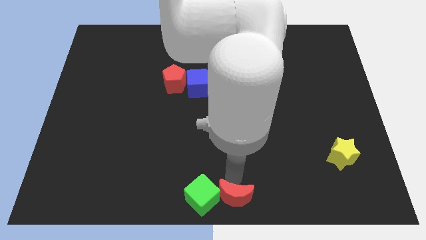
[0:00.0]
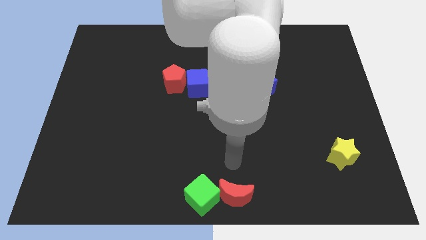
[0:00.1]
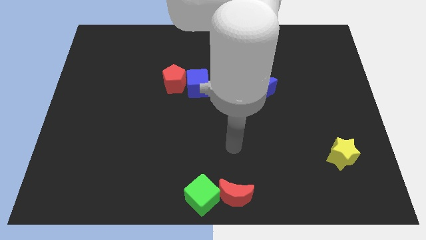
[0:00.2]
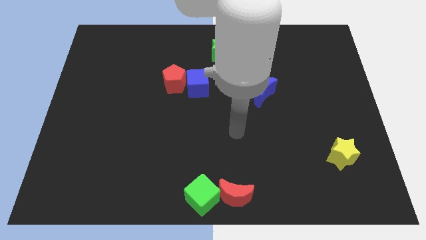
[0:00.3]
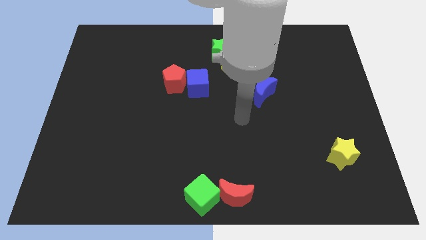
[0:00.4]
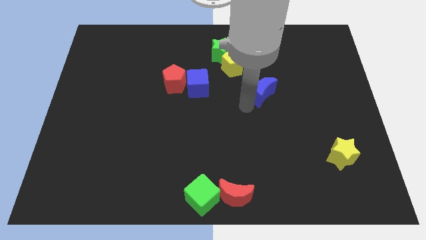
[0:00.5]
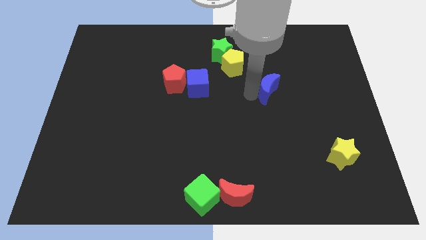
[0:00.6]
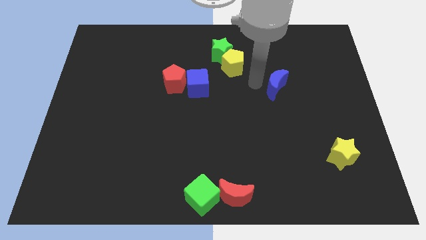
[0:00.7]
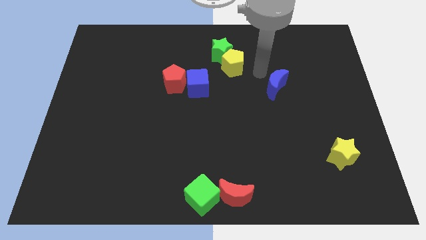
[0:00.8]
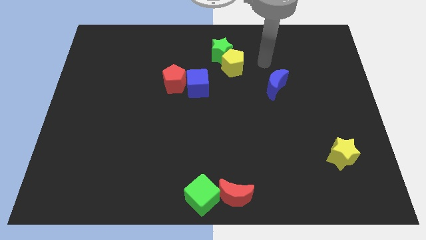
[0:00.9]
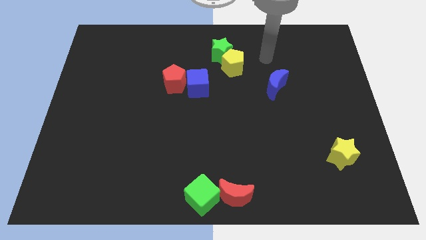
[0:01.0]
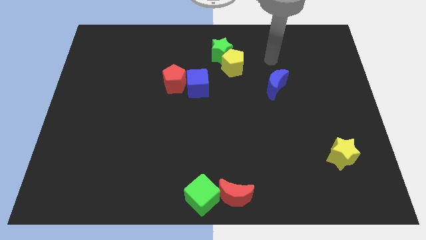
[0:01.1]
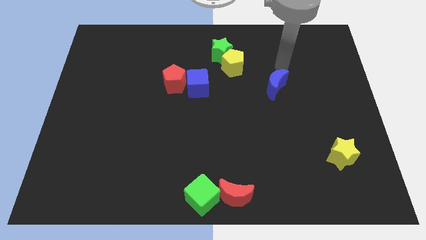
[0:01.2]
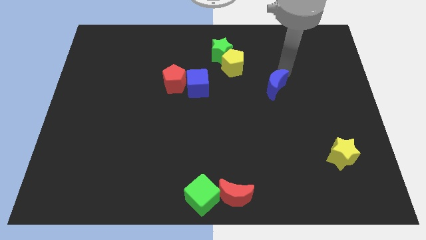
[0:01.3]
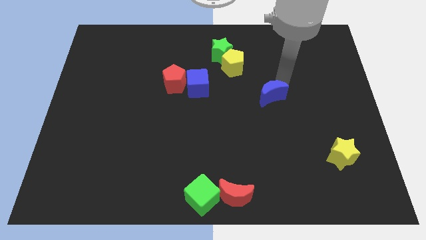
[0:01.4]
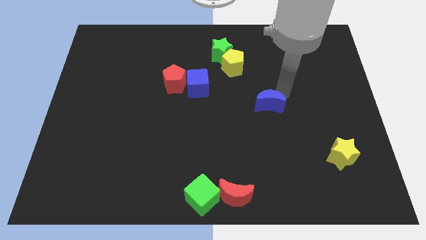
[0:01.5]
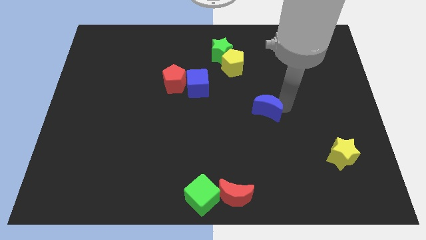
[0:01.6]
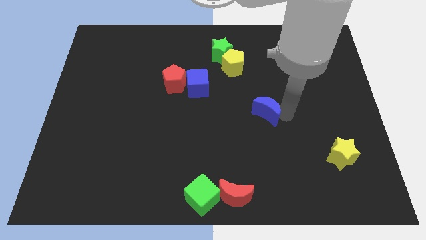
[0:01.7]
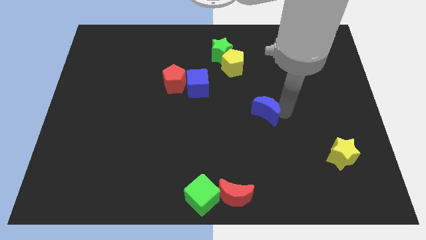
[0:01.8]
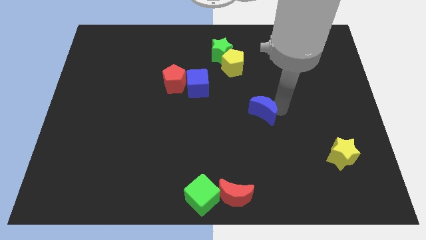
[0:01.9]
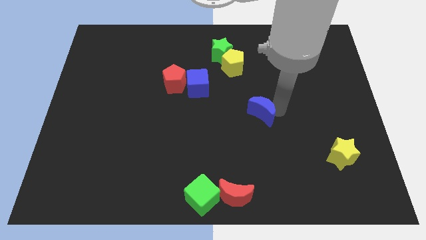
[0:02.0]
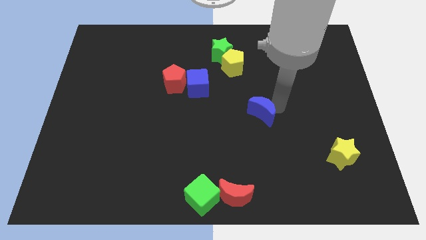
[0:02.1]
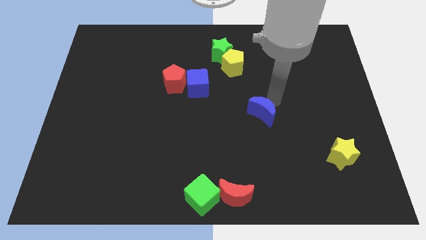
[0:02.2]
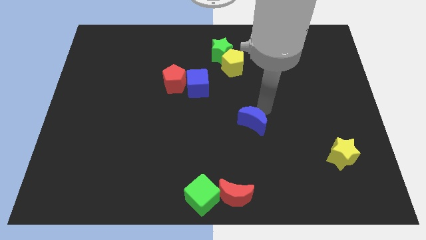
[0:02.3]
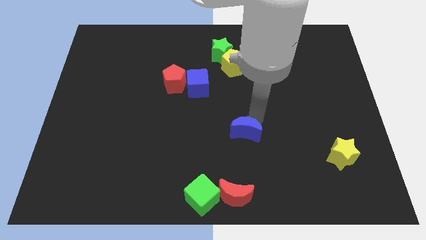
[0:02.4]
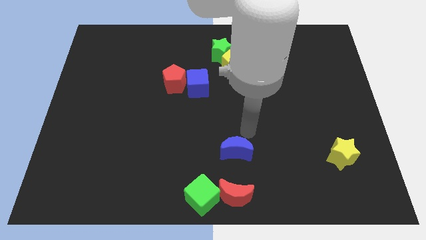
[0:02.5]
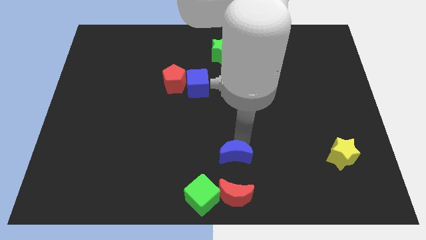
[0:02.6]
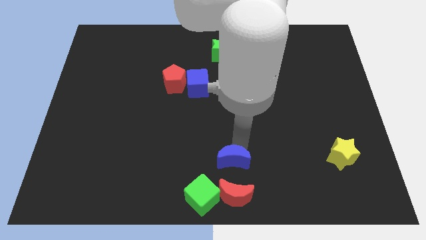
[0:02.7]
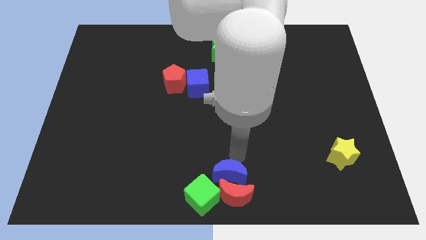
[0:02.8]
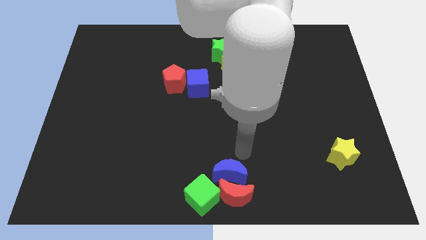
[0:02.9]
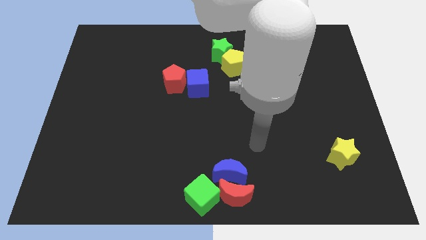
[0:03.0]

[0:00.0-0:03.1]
place the blue moon at the top of red moon

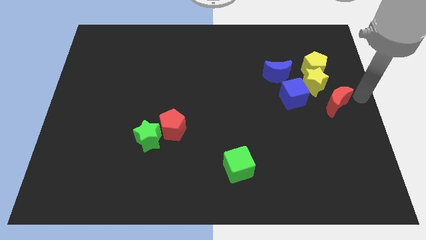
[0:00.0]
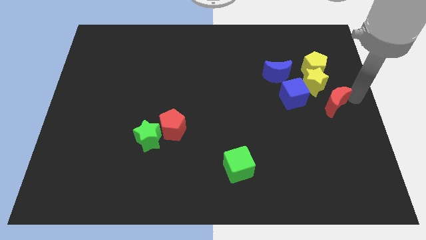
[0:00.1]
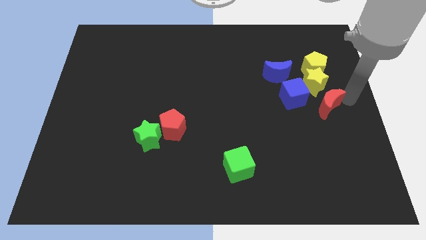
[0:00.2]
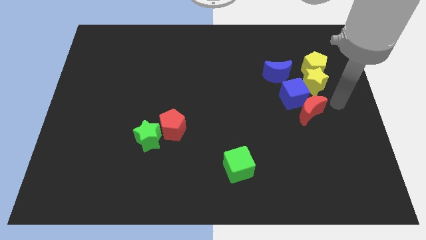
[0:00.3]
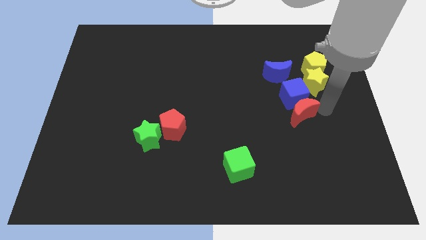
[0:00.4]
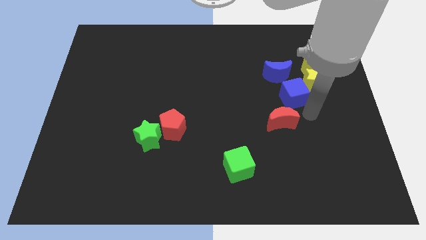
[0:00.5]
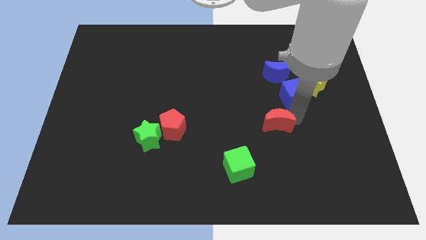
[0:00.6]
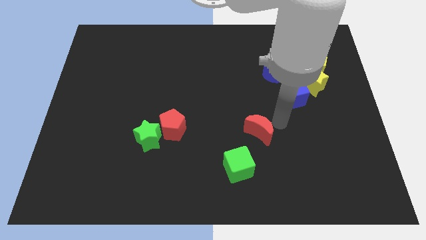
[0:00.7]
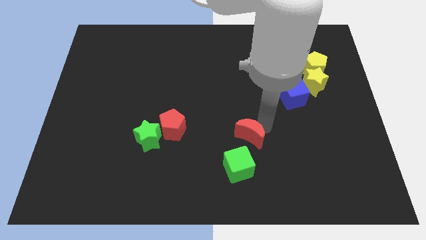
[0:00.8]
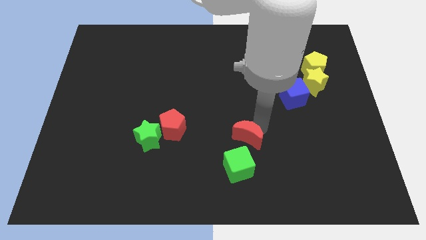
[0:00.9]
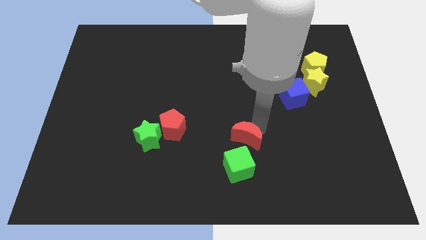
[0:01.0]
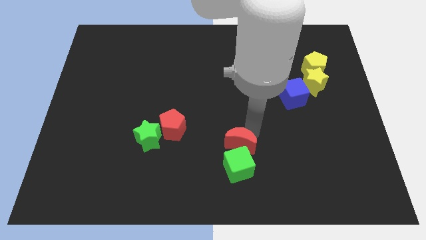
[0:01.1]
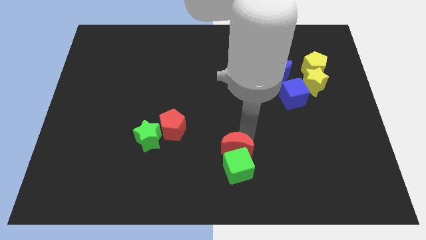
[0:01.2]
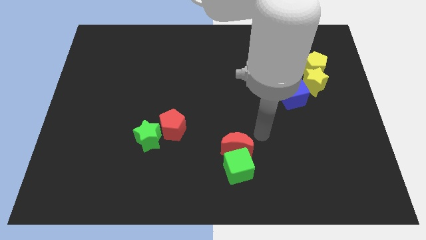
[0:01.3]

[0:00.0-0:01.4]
place the red moon above the green cube

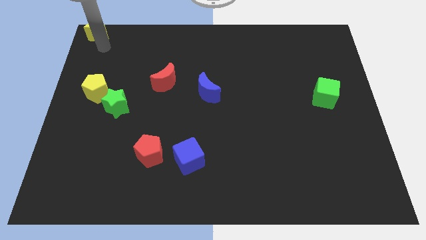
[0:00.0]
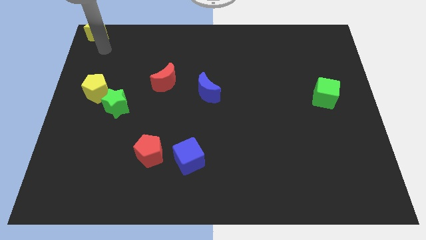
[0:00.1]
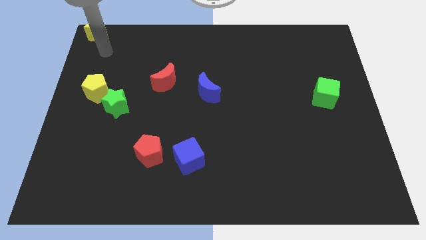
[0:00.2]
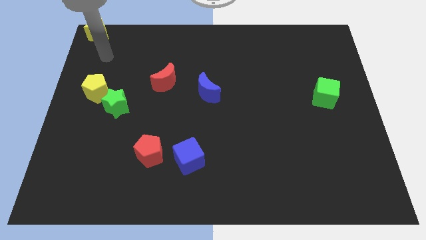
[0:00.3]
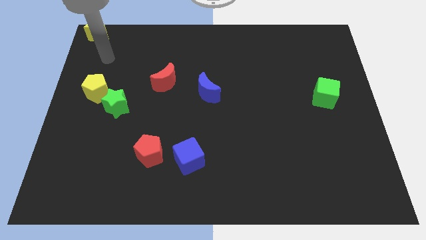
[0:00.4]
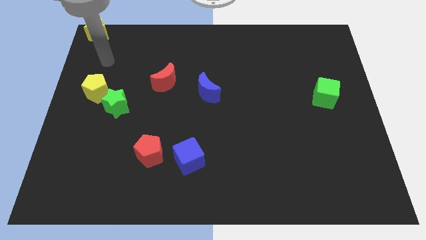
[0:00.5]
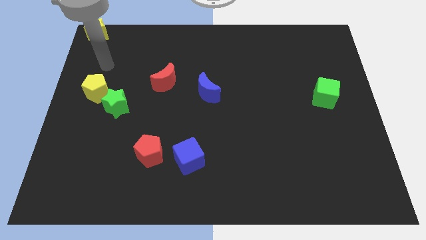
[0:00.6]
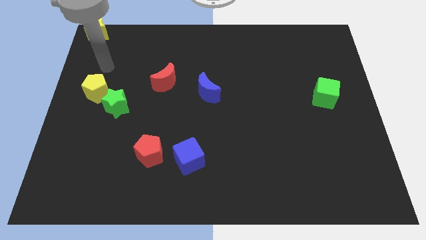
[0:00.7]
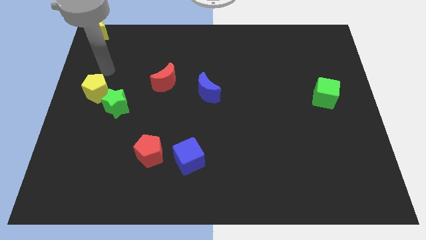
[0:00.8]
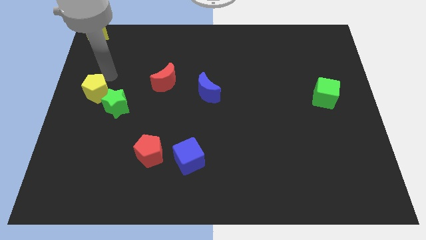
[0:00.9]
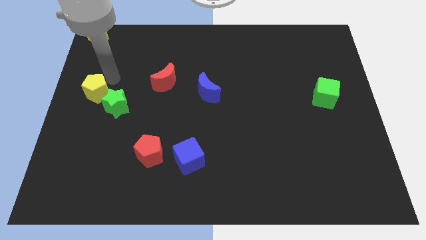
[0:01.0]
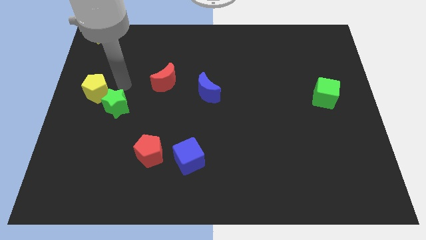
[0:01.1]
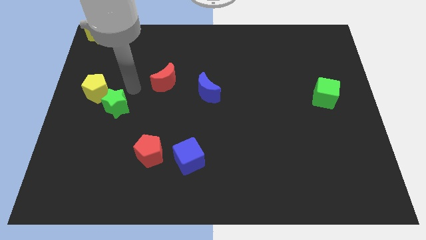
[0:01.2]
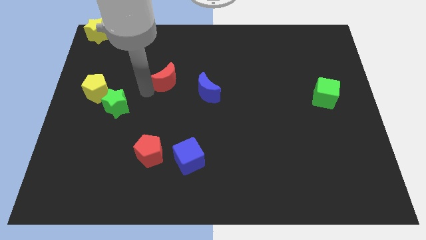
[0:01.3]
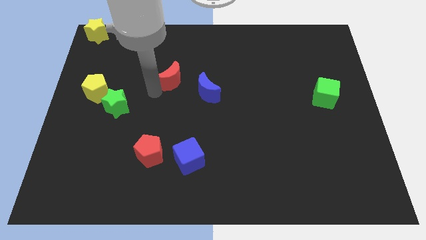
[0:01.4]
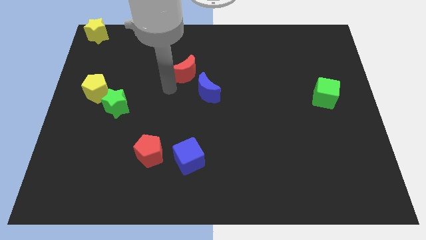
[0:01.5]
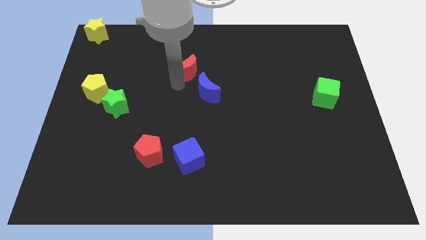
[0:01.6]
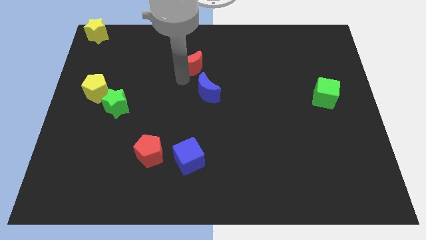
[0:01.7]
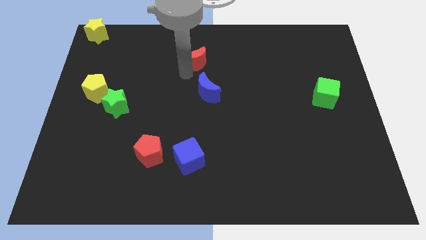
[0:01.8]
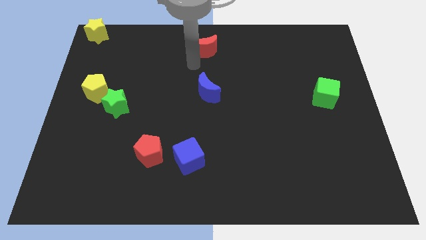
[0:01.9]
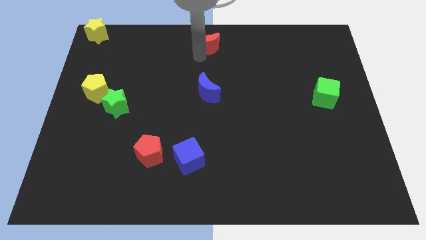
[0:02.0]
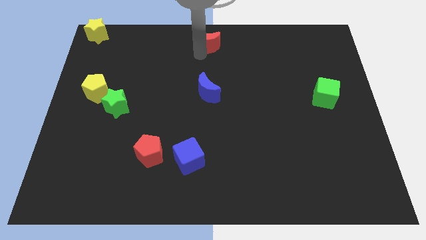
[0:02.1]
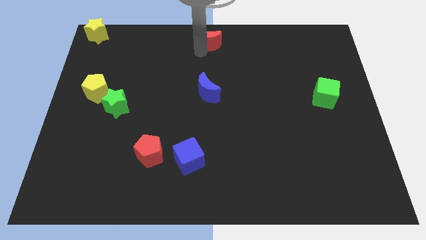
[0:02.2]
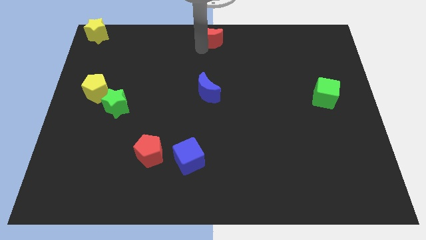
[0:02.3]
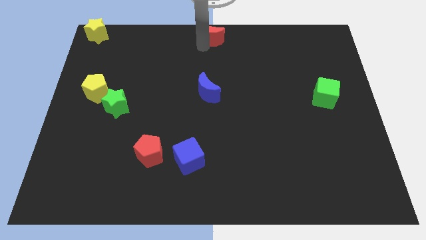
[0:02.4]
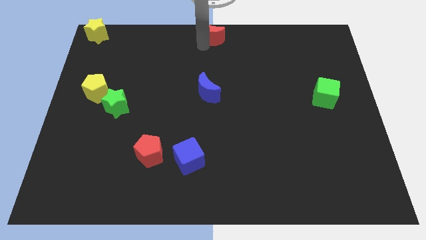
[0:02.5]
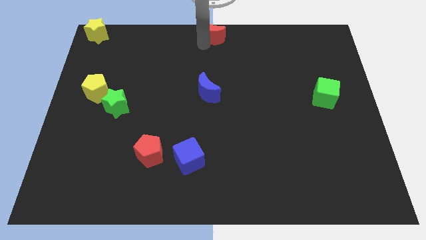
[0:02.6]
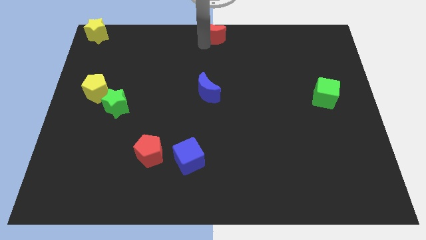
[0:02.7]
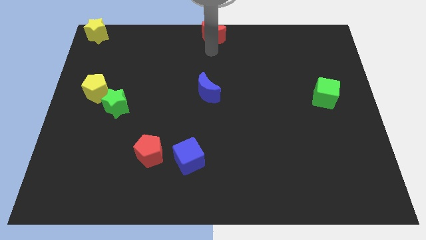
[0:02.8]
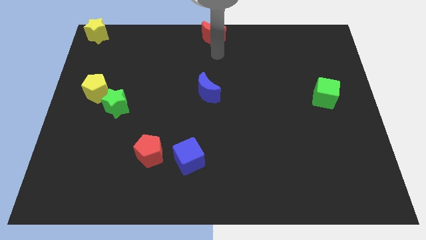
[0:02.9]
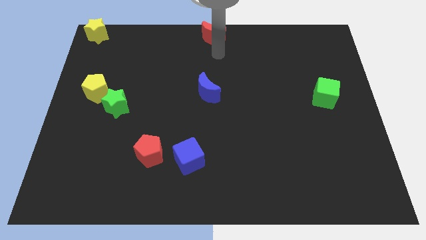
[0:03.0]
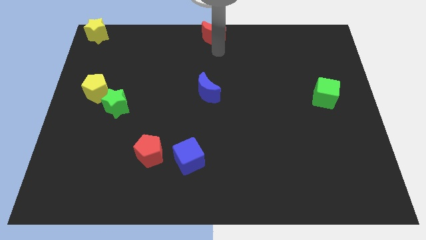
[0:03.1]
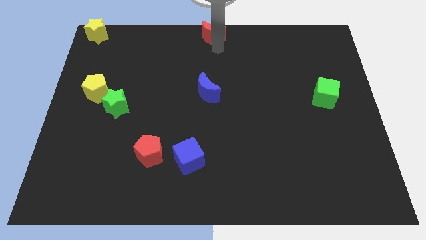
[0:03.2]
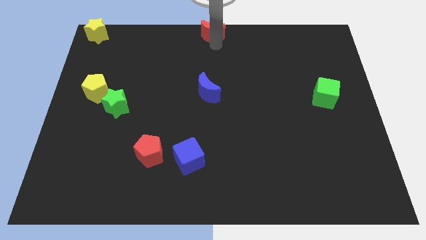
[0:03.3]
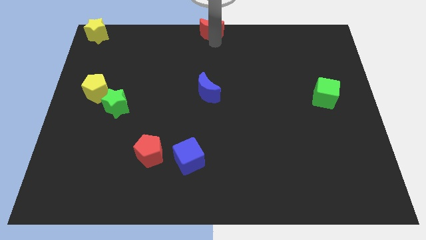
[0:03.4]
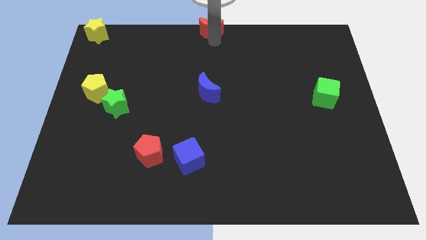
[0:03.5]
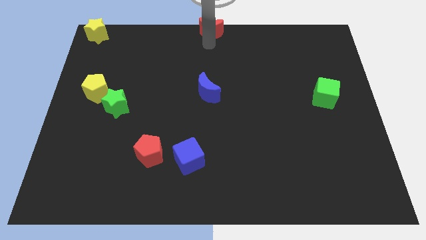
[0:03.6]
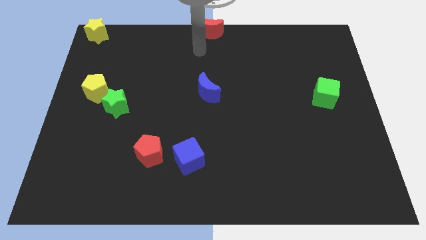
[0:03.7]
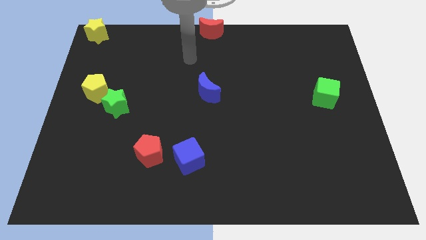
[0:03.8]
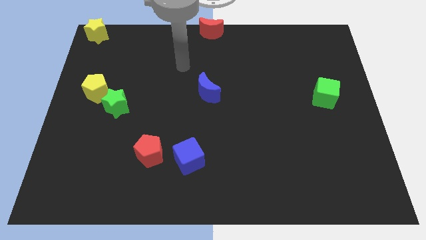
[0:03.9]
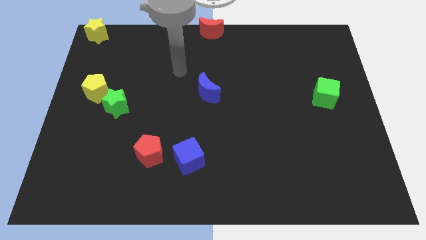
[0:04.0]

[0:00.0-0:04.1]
push the red crescent above the blue crescent

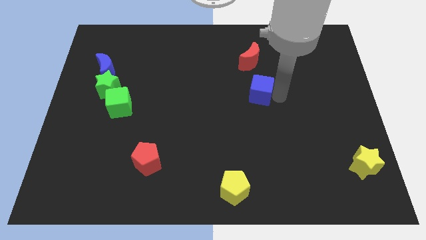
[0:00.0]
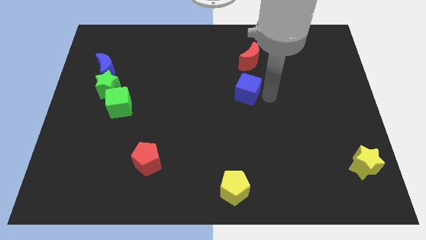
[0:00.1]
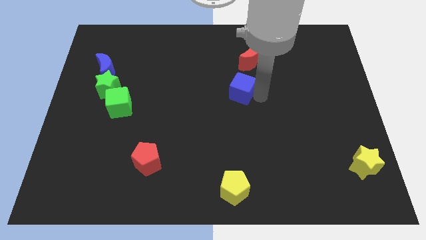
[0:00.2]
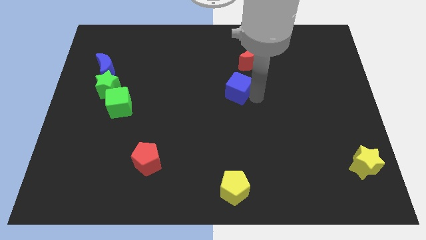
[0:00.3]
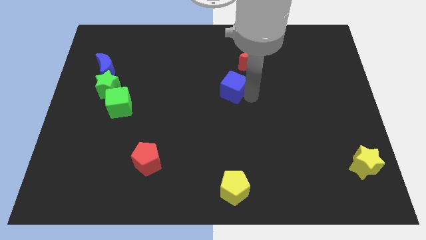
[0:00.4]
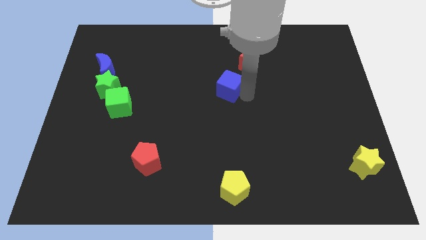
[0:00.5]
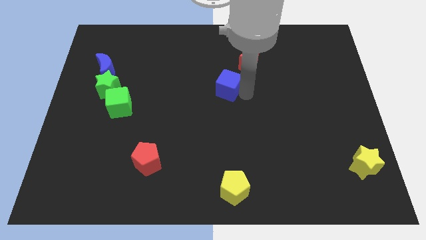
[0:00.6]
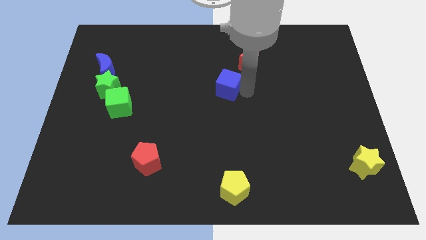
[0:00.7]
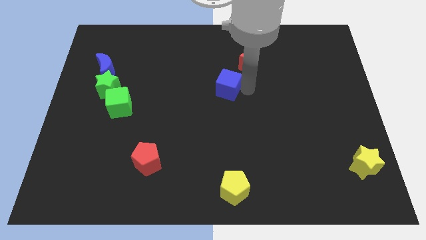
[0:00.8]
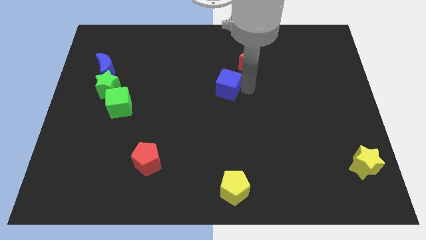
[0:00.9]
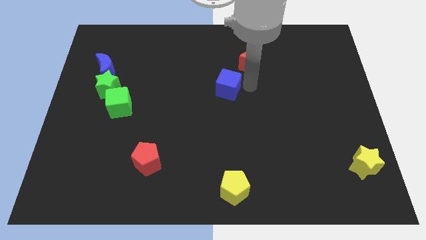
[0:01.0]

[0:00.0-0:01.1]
push the blue cube slightly to the left
